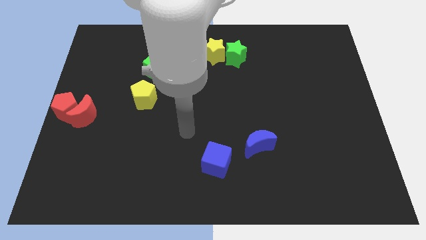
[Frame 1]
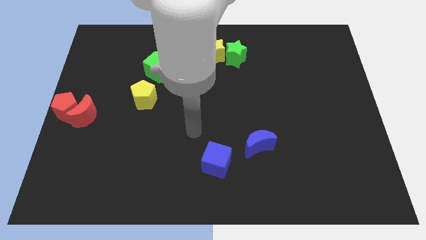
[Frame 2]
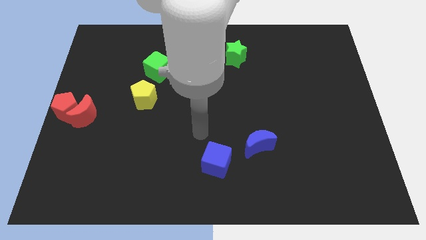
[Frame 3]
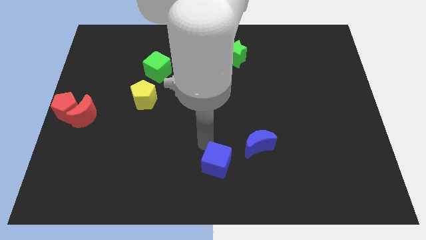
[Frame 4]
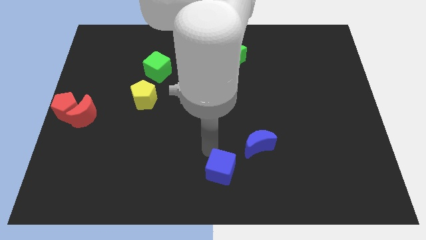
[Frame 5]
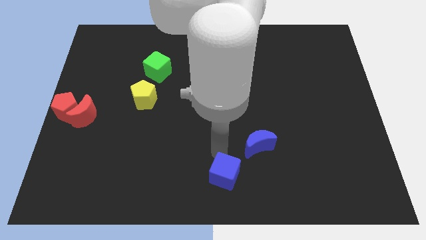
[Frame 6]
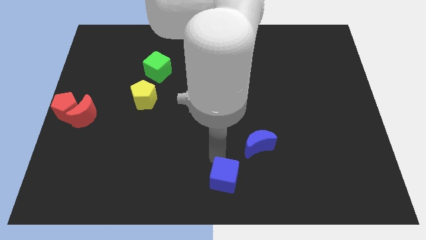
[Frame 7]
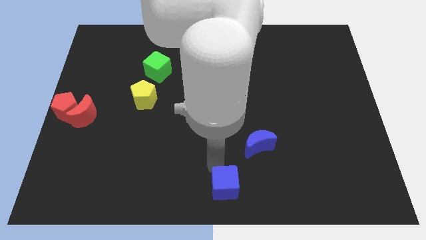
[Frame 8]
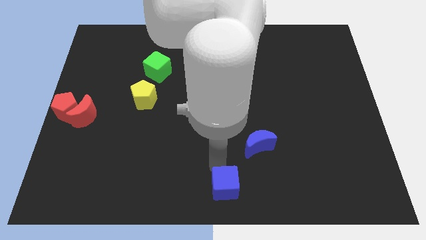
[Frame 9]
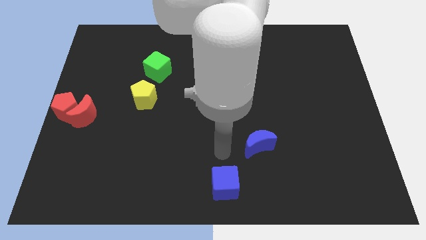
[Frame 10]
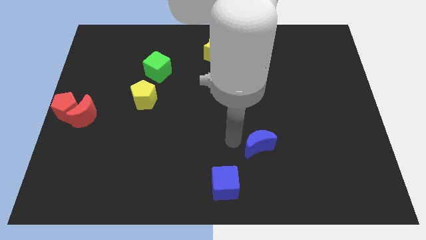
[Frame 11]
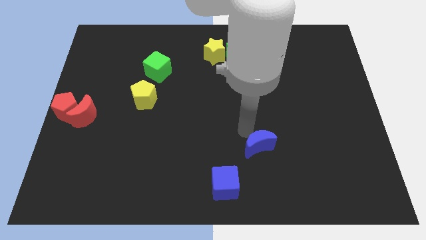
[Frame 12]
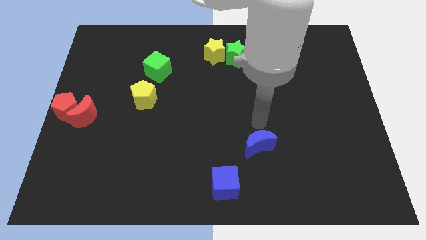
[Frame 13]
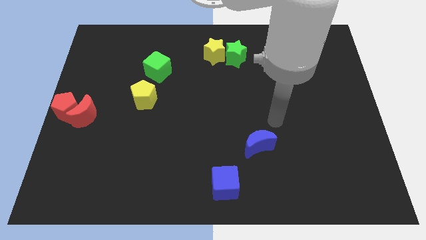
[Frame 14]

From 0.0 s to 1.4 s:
push the blue cube to the bottom center of the board

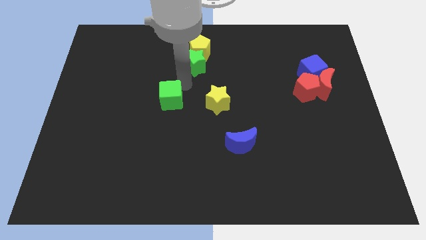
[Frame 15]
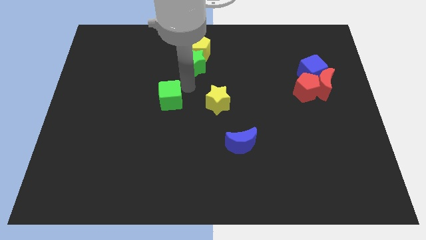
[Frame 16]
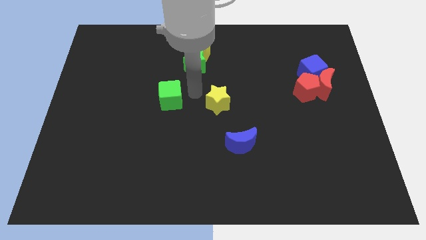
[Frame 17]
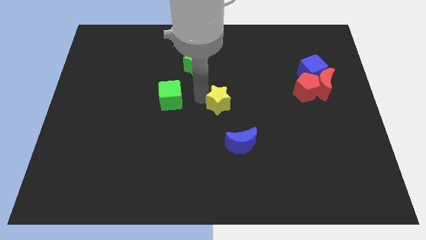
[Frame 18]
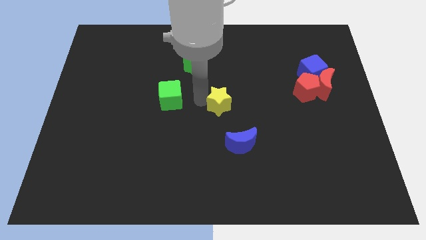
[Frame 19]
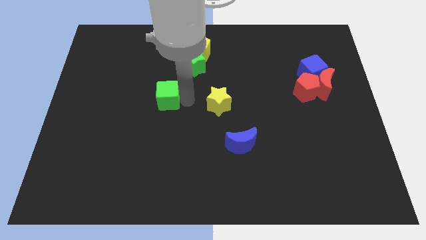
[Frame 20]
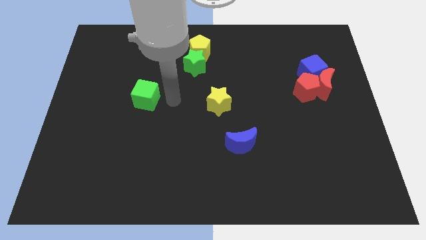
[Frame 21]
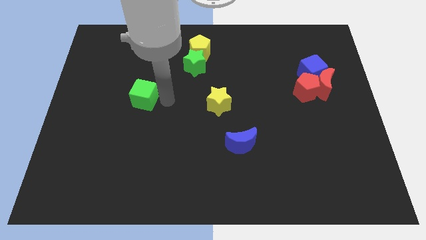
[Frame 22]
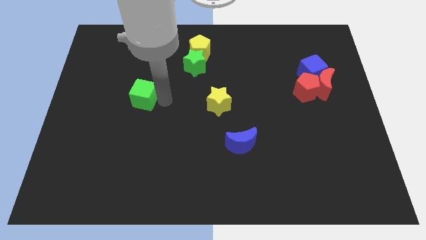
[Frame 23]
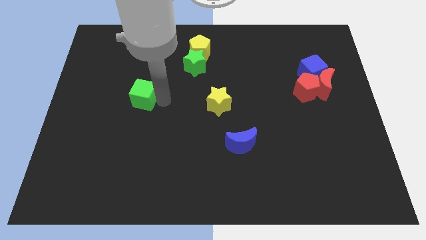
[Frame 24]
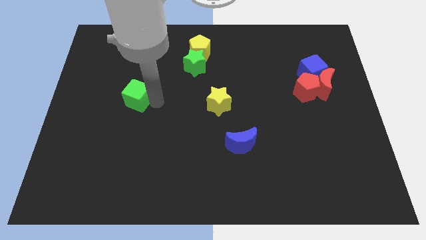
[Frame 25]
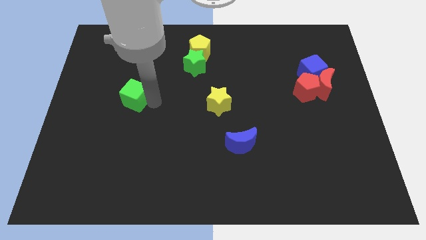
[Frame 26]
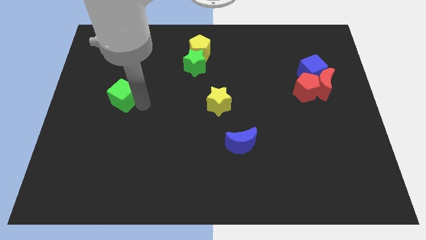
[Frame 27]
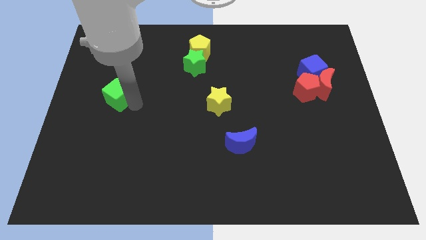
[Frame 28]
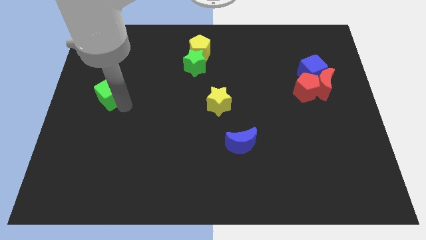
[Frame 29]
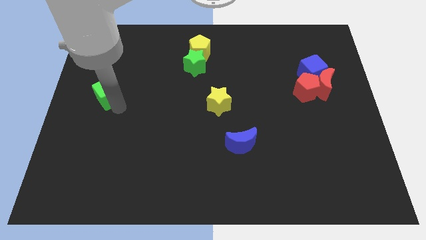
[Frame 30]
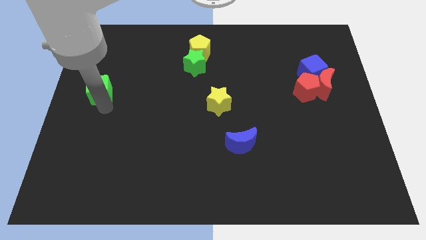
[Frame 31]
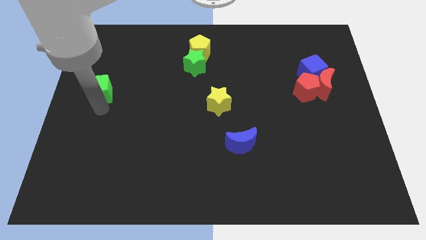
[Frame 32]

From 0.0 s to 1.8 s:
push the green cube to the left side of the board

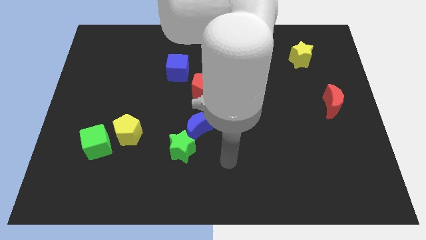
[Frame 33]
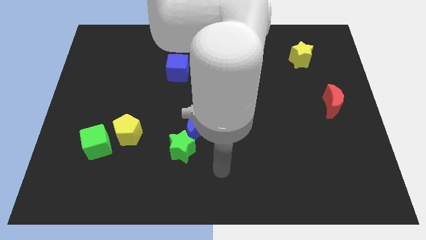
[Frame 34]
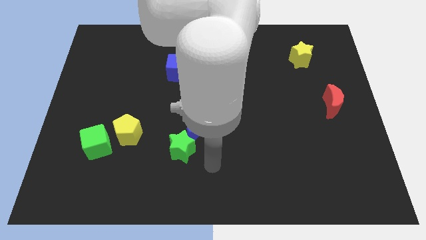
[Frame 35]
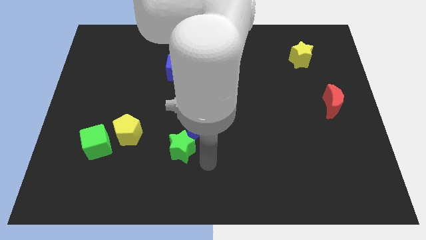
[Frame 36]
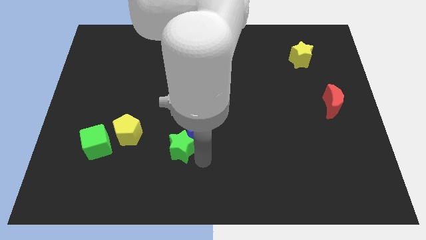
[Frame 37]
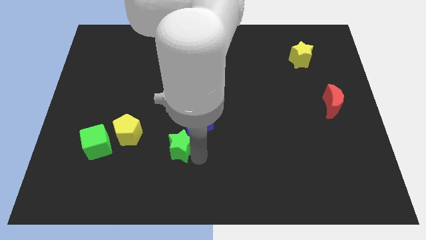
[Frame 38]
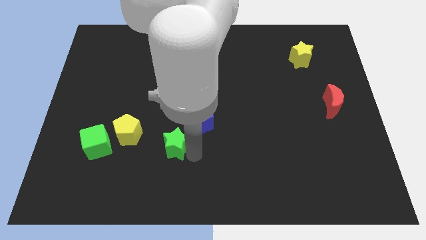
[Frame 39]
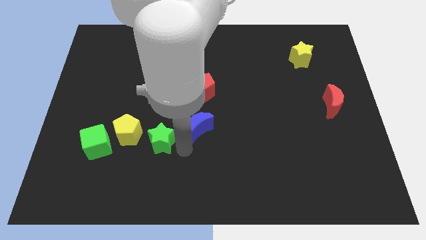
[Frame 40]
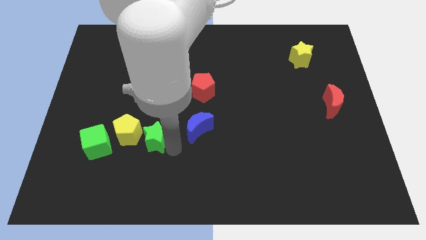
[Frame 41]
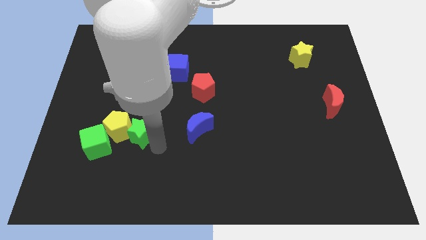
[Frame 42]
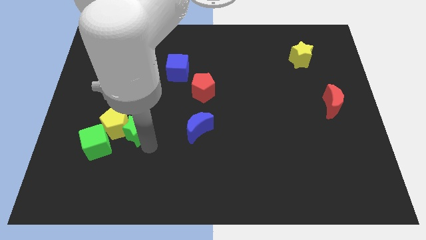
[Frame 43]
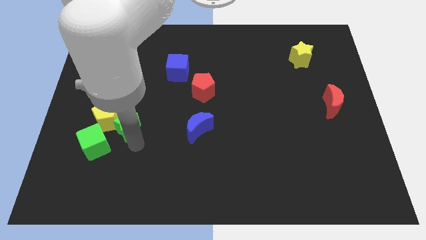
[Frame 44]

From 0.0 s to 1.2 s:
place the green star into the right of the yellow pentagon

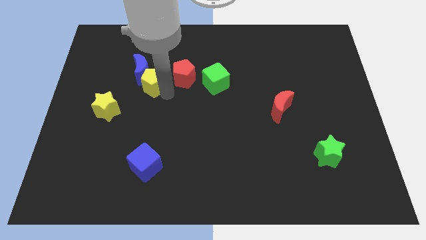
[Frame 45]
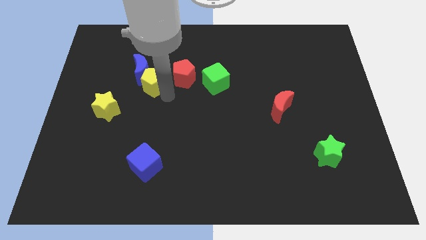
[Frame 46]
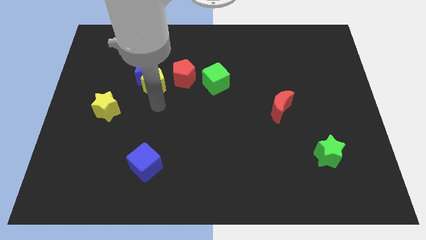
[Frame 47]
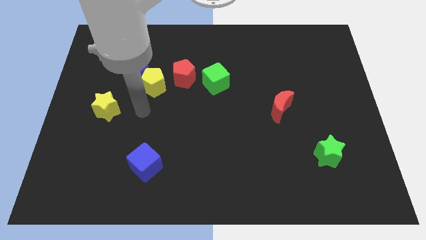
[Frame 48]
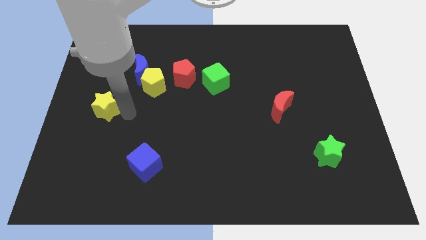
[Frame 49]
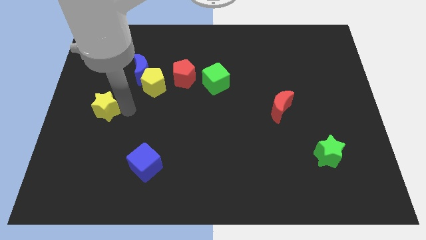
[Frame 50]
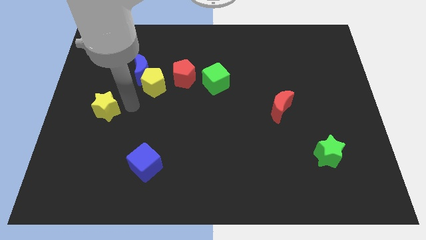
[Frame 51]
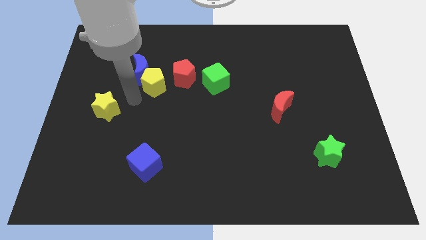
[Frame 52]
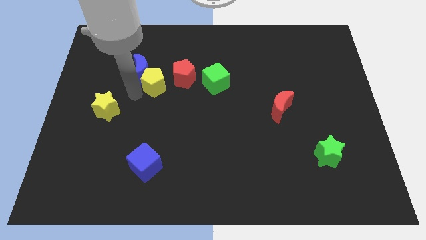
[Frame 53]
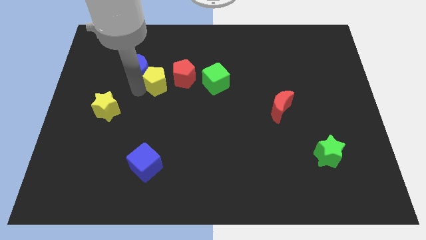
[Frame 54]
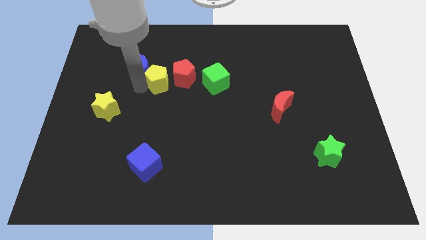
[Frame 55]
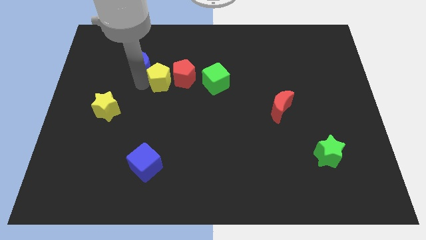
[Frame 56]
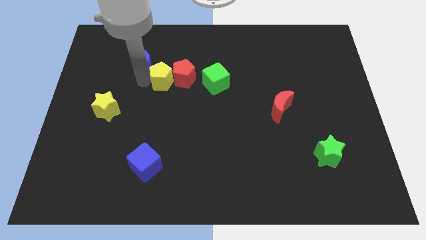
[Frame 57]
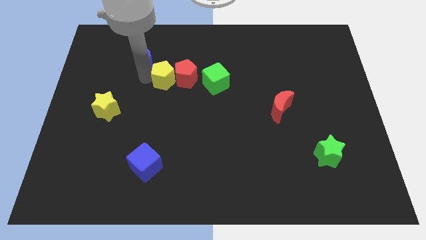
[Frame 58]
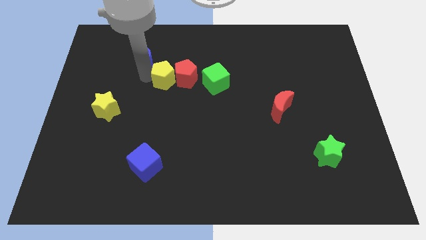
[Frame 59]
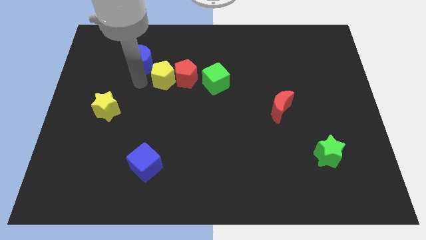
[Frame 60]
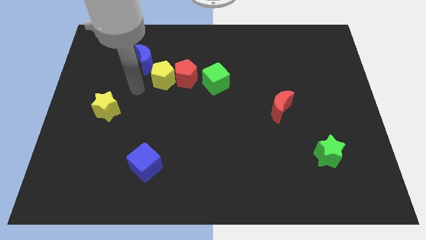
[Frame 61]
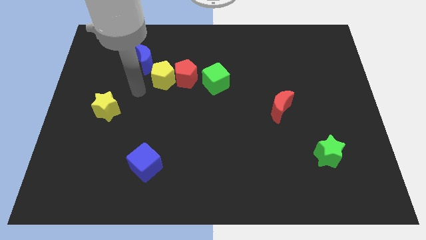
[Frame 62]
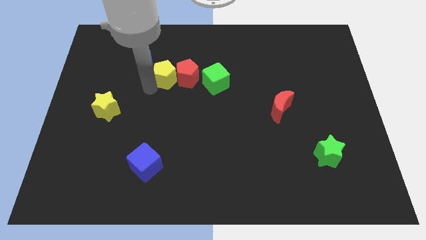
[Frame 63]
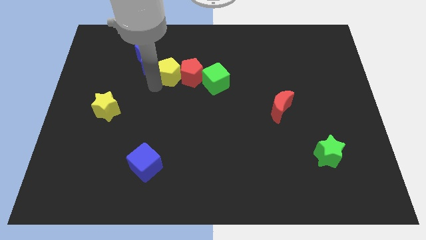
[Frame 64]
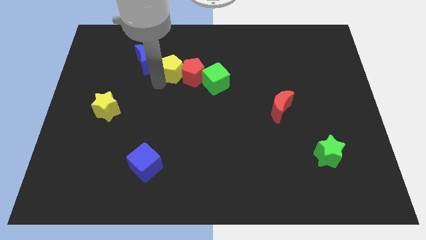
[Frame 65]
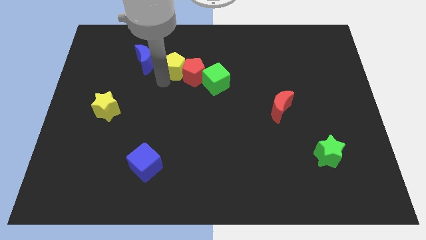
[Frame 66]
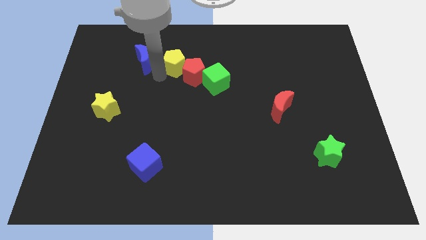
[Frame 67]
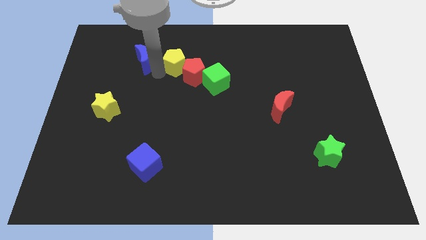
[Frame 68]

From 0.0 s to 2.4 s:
push the yellow pentagon slightly to the top

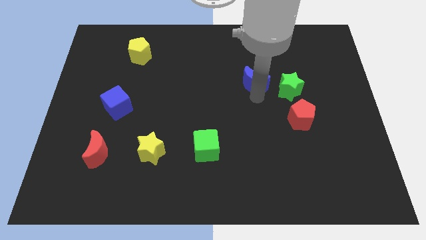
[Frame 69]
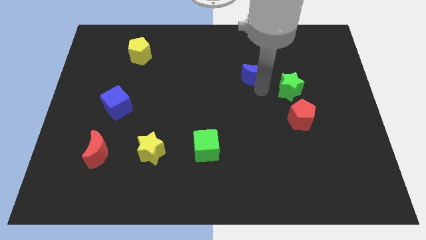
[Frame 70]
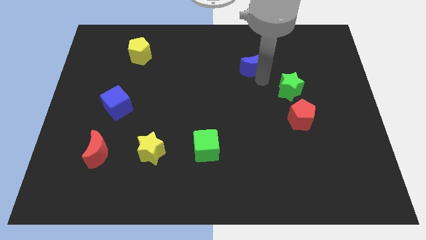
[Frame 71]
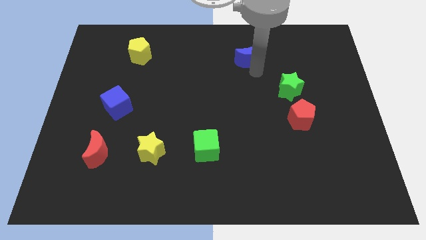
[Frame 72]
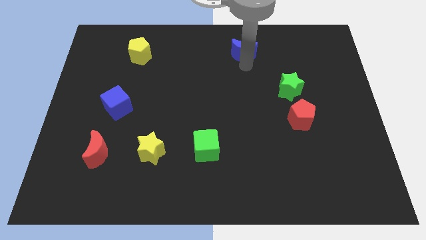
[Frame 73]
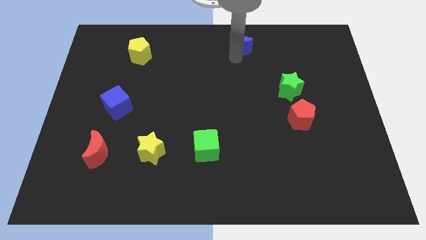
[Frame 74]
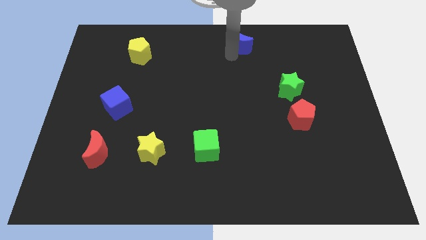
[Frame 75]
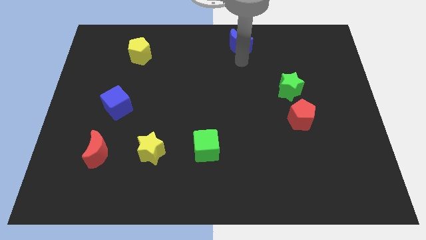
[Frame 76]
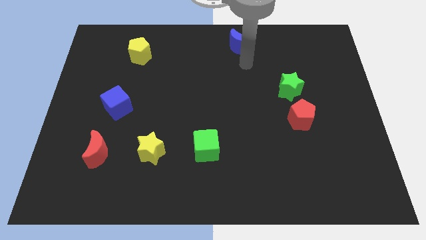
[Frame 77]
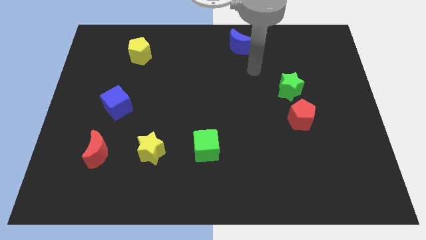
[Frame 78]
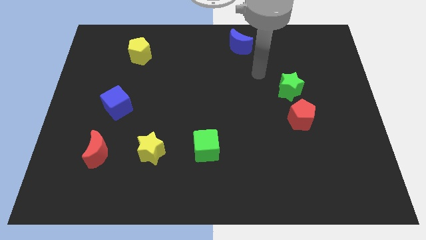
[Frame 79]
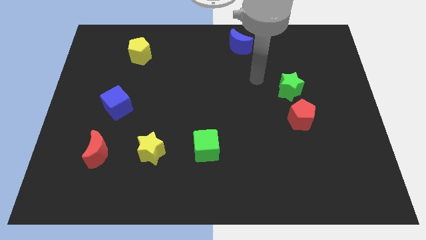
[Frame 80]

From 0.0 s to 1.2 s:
move the blue crescent to the top of the board

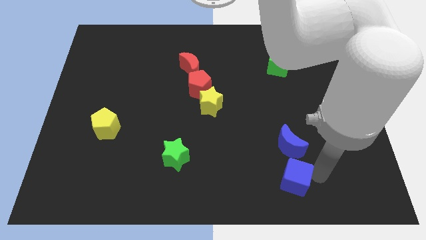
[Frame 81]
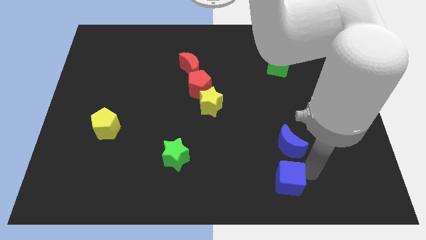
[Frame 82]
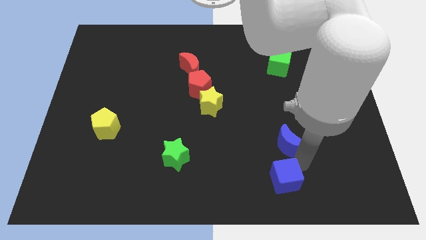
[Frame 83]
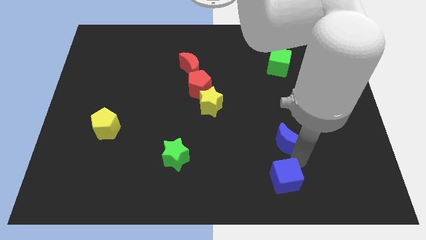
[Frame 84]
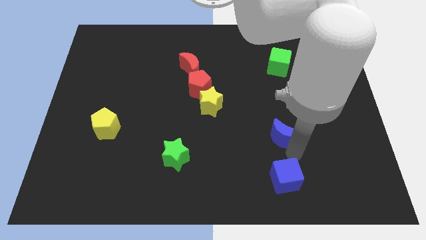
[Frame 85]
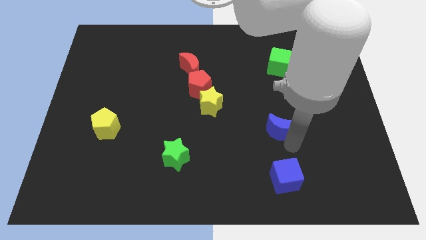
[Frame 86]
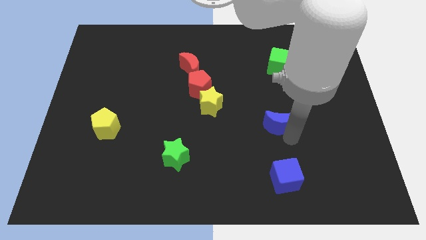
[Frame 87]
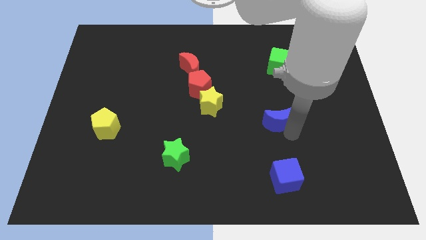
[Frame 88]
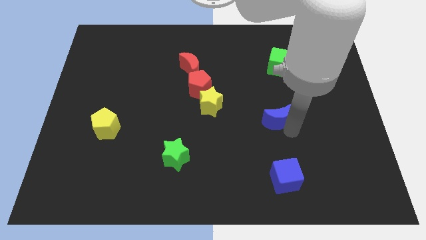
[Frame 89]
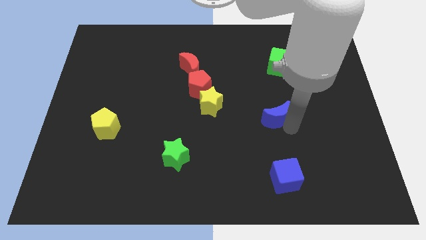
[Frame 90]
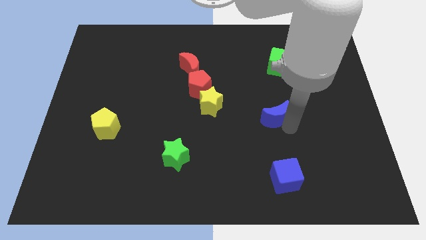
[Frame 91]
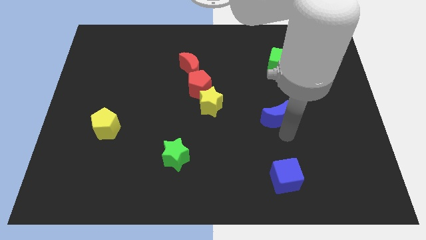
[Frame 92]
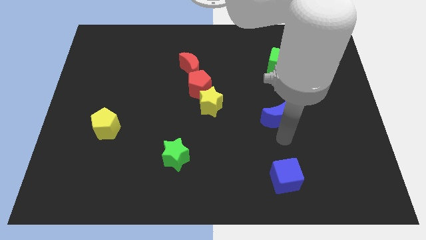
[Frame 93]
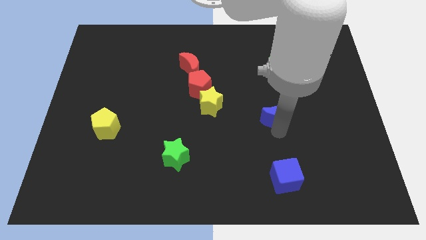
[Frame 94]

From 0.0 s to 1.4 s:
place blue moon to the bottom right of yellow star
